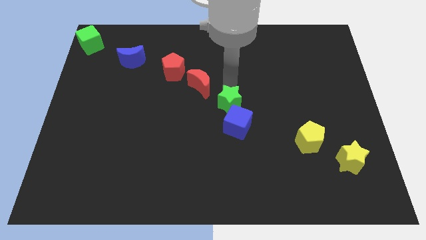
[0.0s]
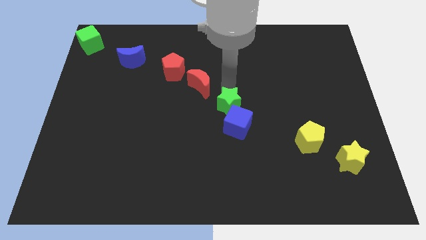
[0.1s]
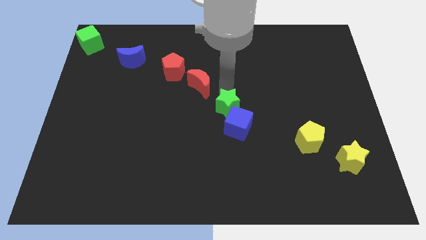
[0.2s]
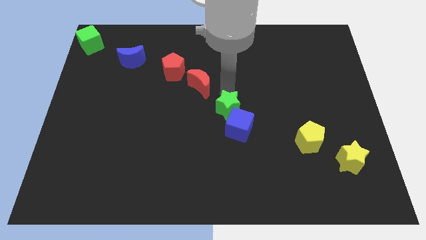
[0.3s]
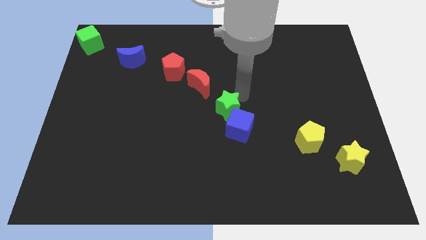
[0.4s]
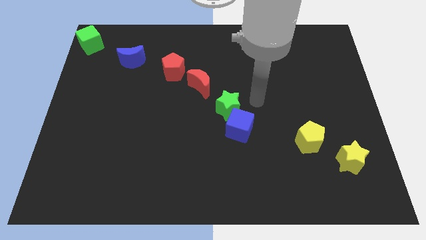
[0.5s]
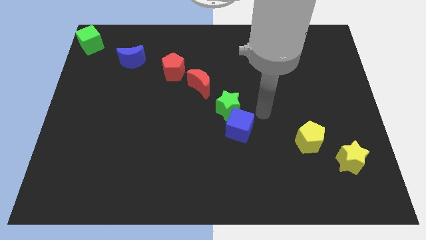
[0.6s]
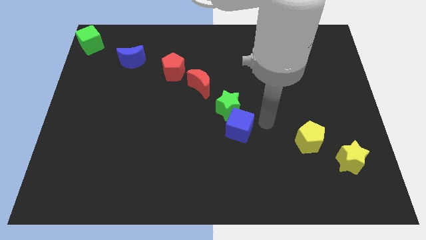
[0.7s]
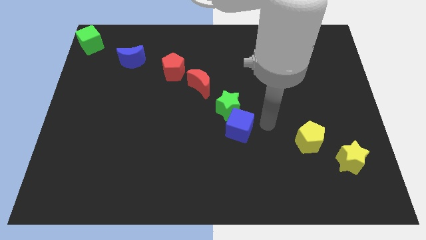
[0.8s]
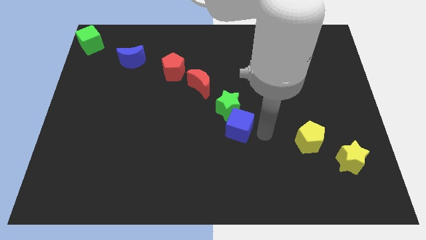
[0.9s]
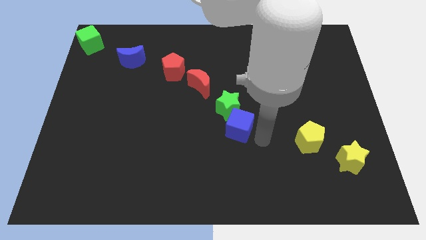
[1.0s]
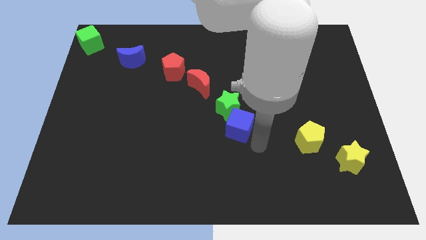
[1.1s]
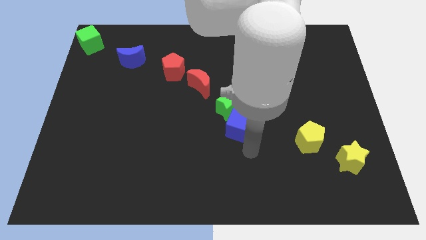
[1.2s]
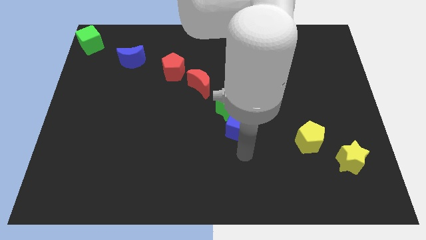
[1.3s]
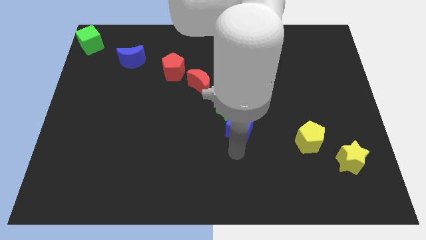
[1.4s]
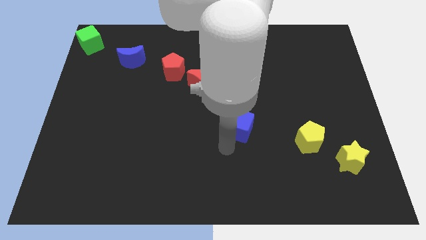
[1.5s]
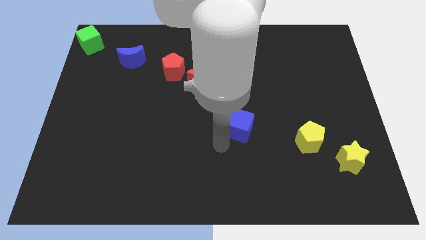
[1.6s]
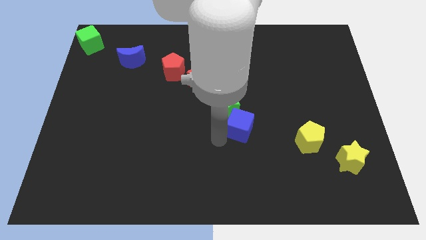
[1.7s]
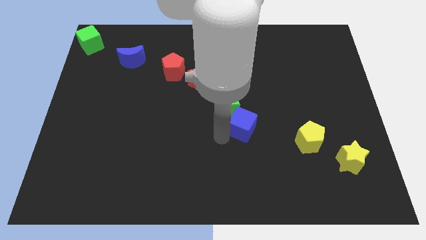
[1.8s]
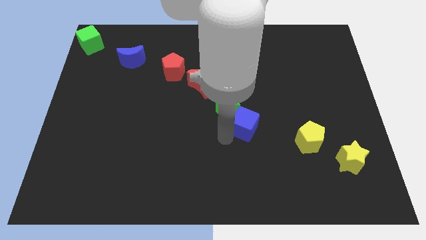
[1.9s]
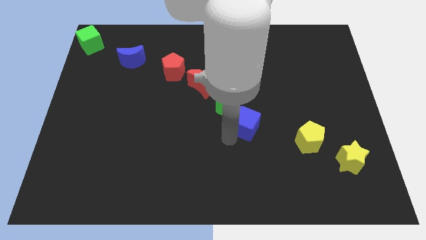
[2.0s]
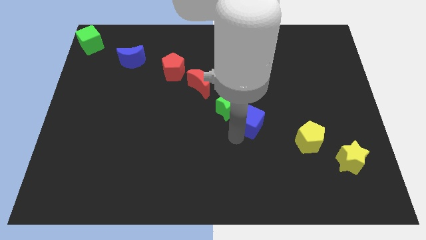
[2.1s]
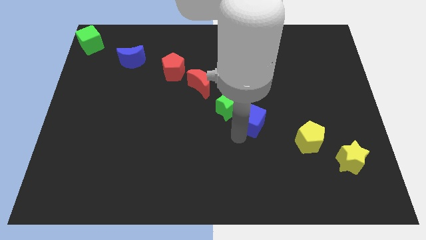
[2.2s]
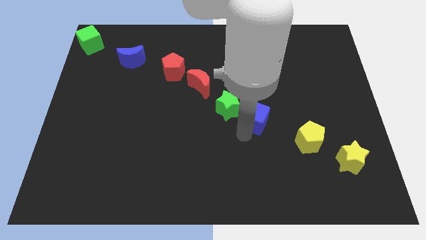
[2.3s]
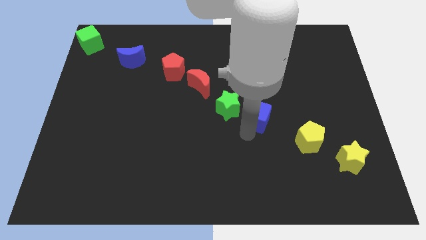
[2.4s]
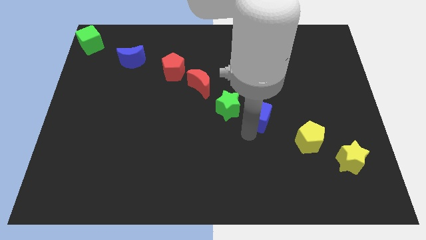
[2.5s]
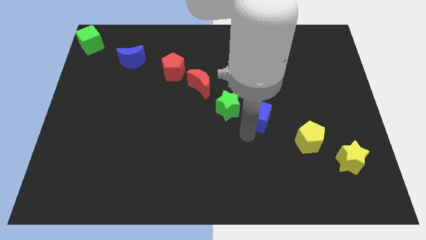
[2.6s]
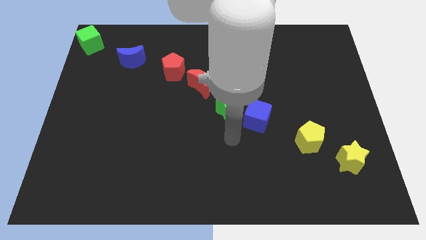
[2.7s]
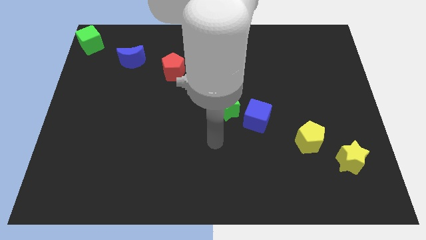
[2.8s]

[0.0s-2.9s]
place the blue cube diagonal to the yellow pentagon

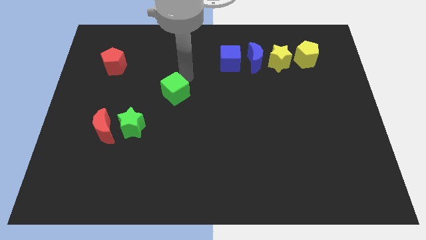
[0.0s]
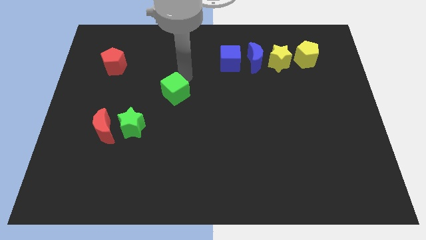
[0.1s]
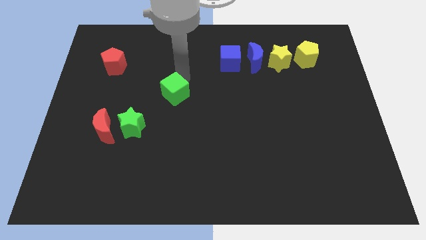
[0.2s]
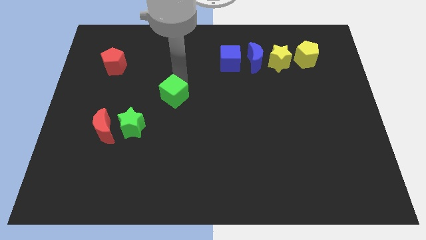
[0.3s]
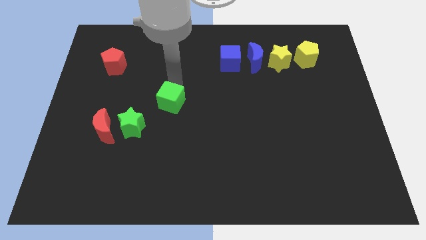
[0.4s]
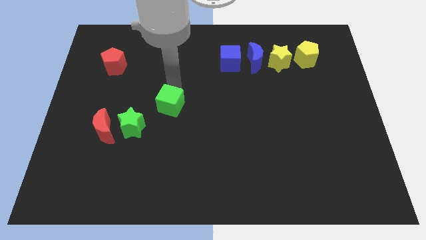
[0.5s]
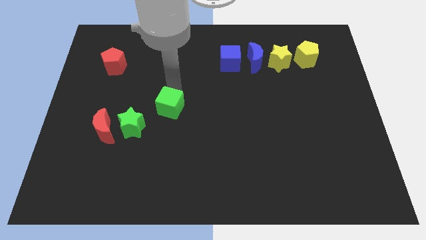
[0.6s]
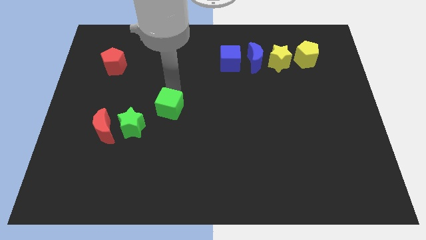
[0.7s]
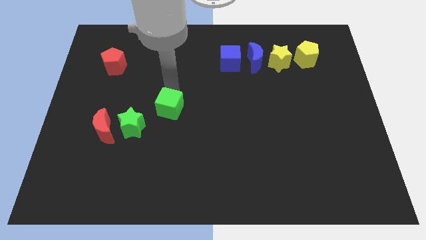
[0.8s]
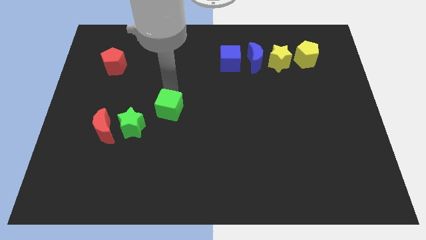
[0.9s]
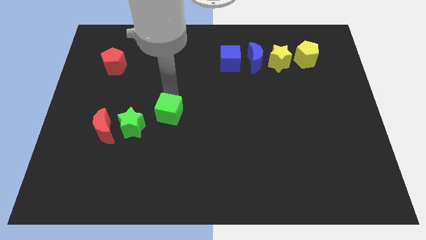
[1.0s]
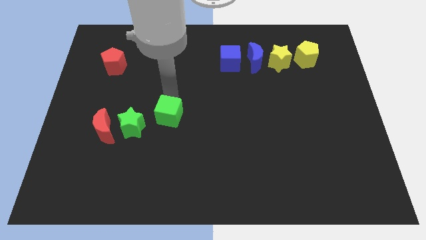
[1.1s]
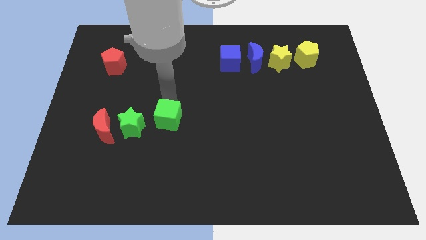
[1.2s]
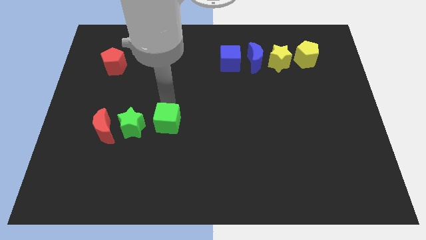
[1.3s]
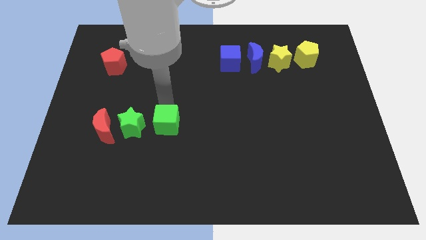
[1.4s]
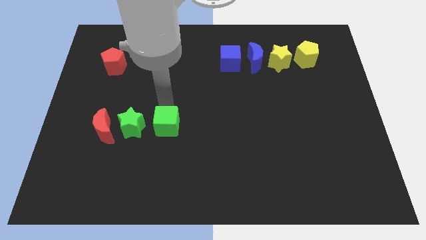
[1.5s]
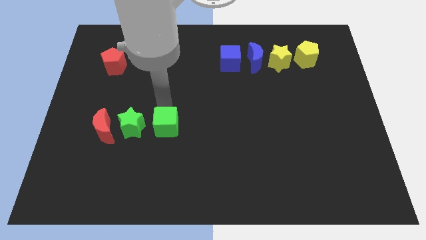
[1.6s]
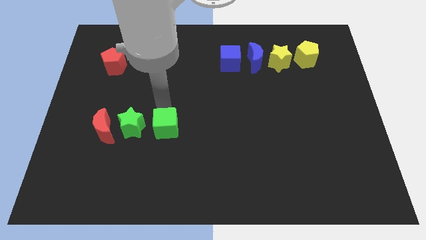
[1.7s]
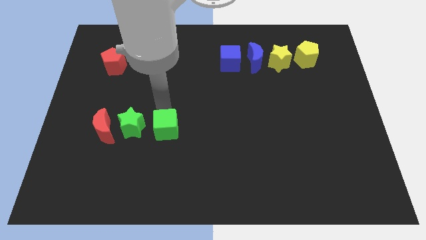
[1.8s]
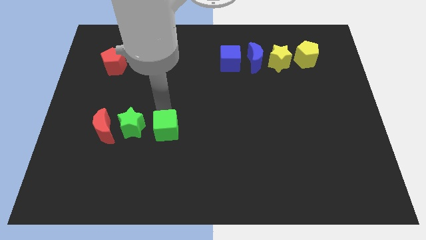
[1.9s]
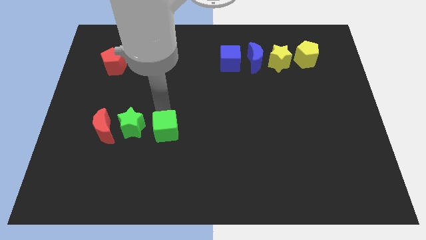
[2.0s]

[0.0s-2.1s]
place the green cube to the right of the green star

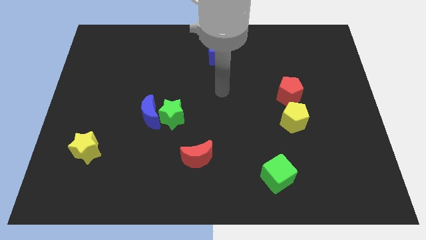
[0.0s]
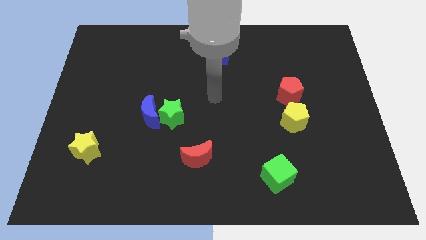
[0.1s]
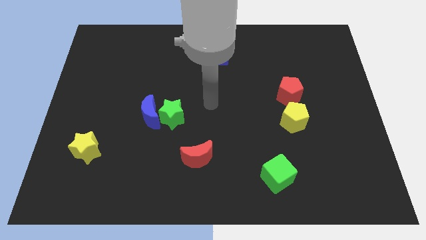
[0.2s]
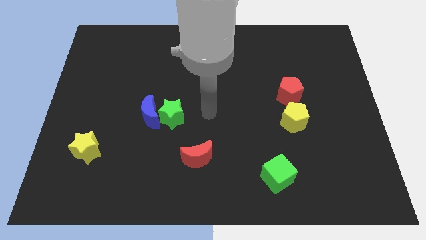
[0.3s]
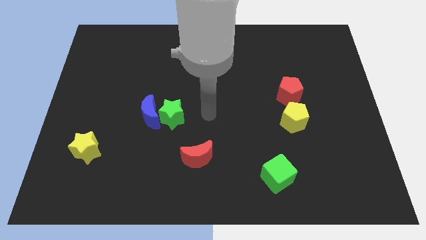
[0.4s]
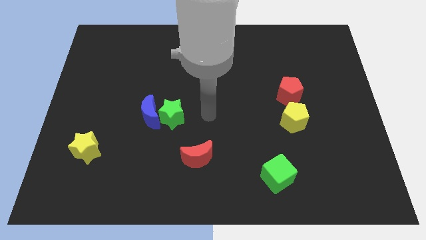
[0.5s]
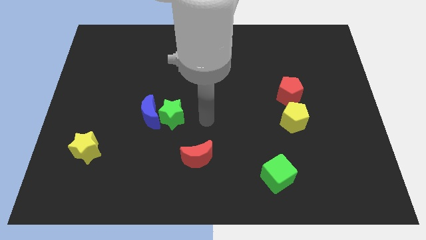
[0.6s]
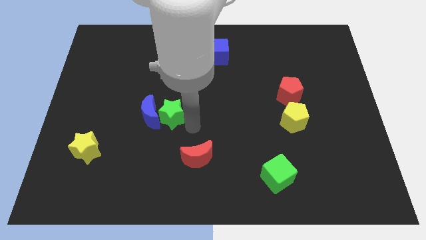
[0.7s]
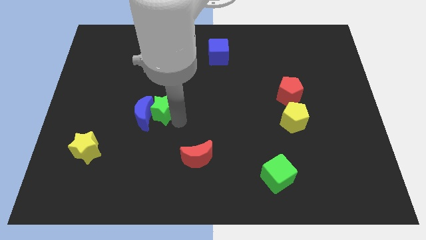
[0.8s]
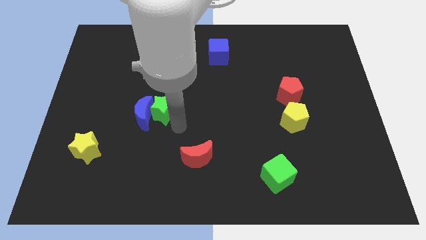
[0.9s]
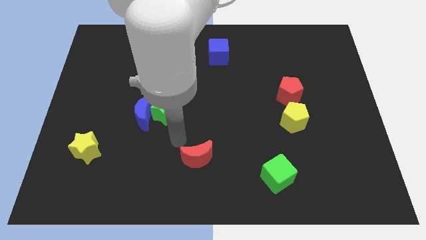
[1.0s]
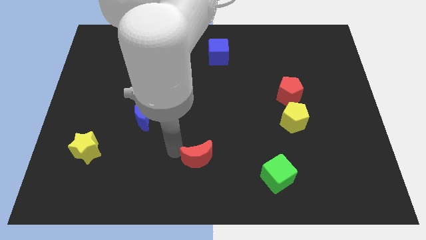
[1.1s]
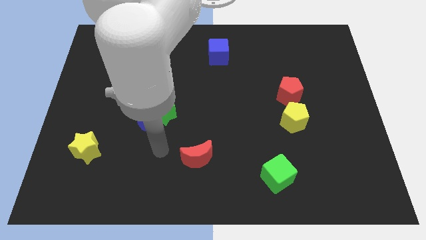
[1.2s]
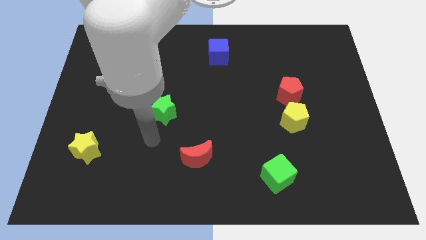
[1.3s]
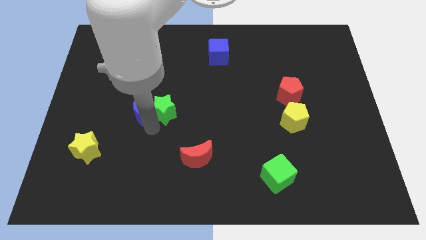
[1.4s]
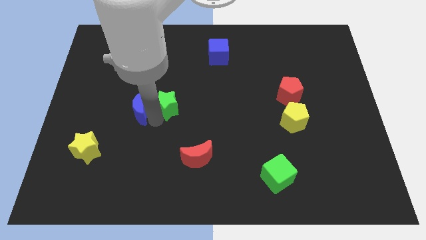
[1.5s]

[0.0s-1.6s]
move your arm in between blue crescent and green star

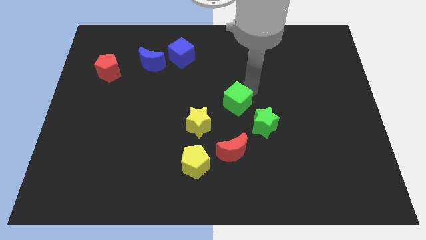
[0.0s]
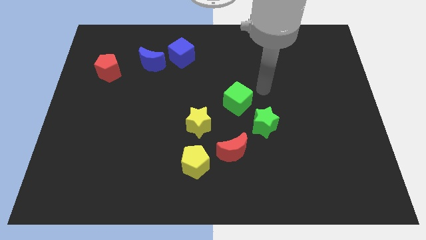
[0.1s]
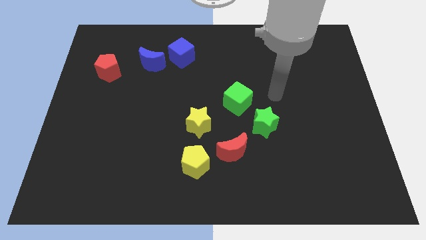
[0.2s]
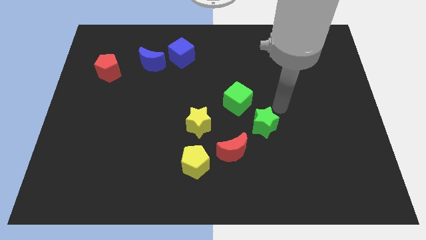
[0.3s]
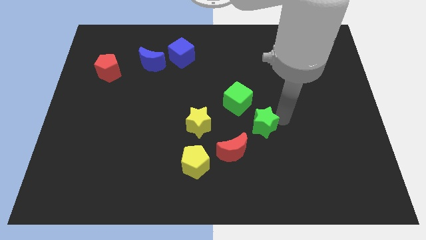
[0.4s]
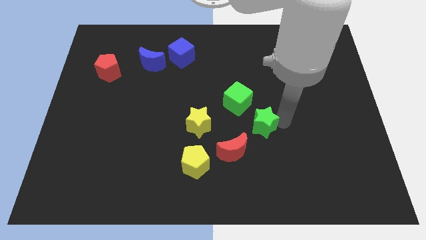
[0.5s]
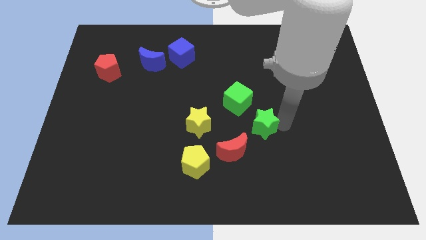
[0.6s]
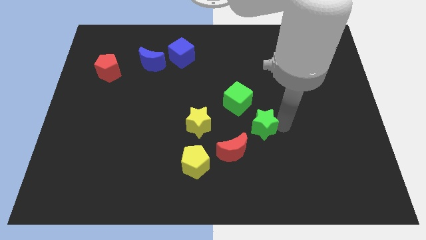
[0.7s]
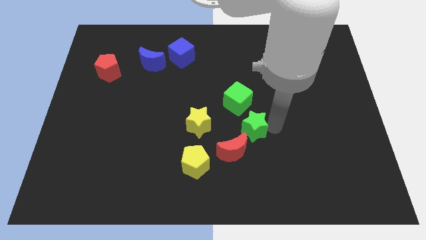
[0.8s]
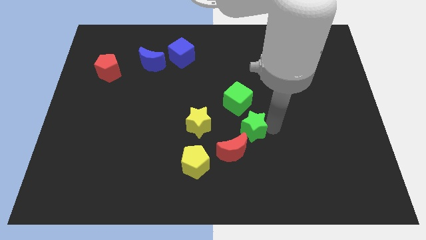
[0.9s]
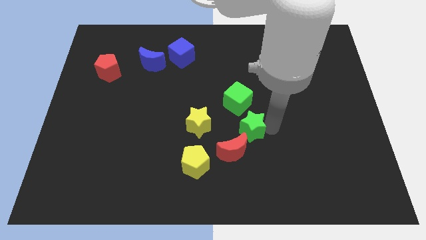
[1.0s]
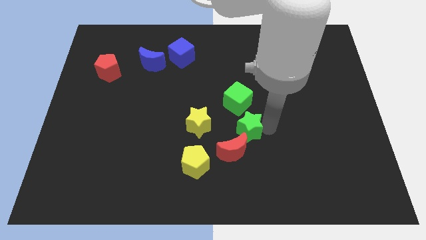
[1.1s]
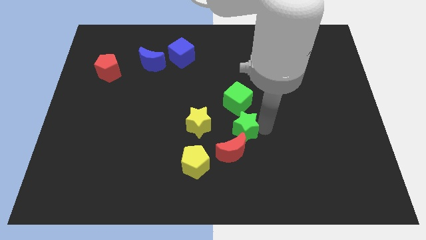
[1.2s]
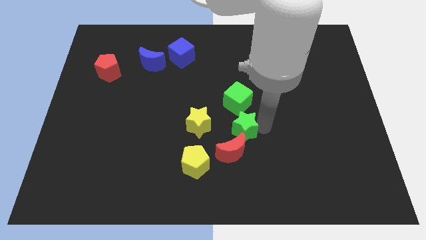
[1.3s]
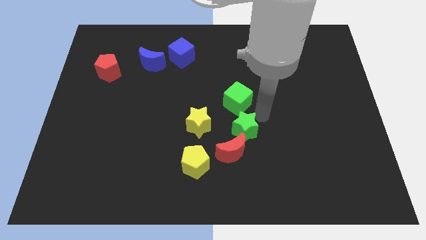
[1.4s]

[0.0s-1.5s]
place green star to the top of red moon

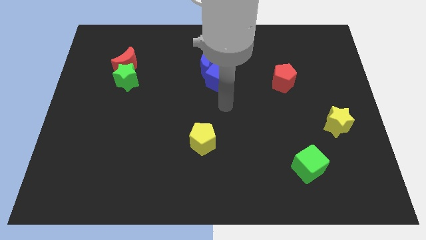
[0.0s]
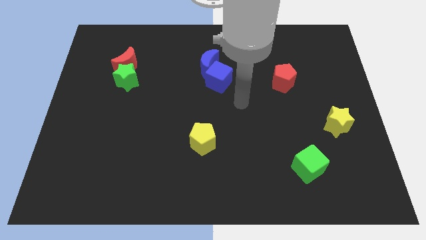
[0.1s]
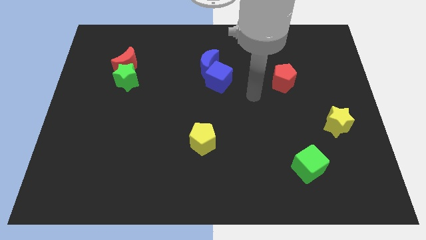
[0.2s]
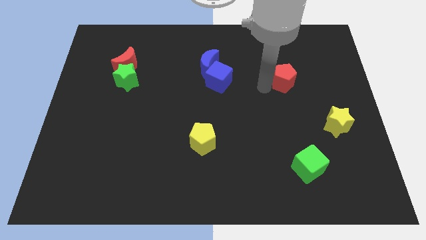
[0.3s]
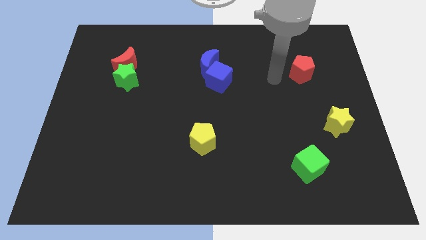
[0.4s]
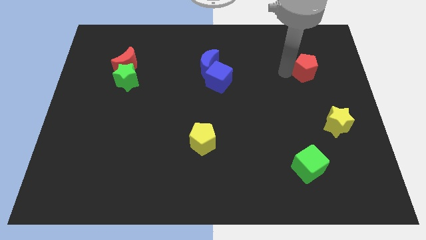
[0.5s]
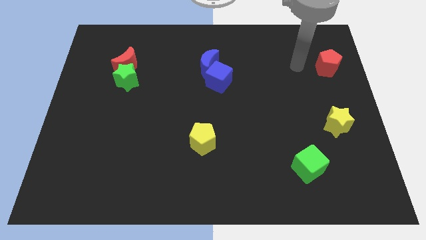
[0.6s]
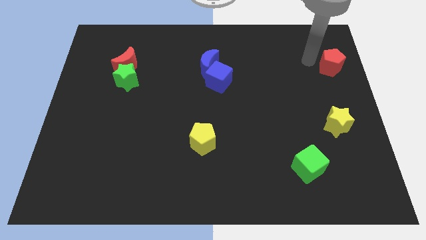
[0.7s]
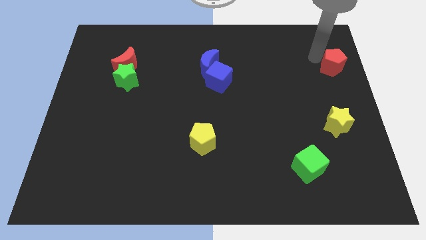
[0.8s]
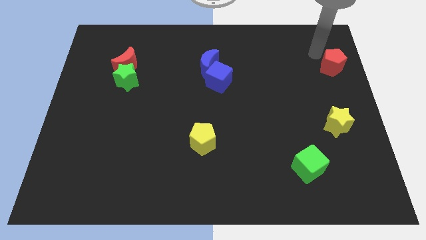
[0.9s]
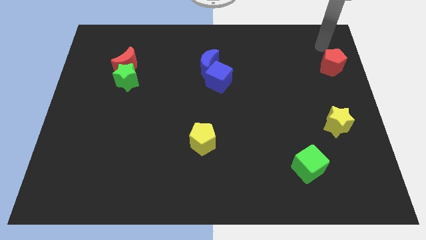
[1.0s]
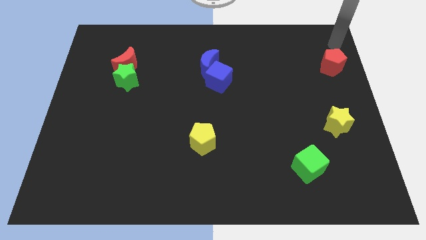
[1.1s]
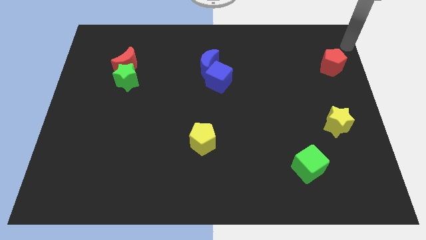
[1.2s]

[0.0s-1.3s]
push the red pentagon towards the top right corner of the board
